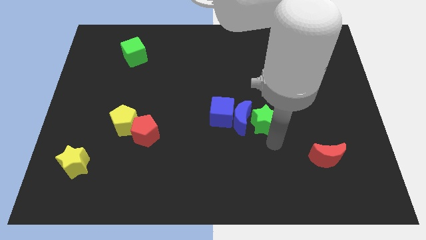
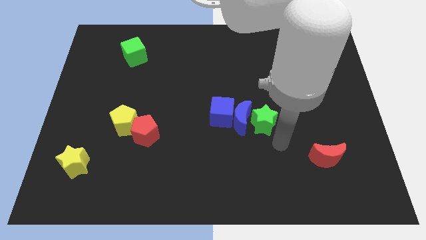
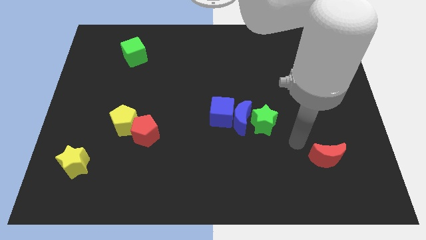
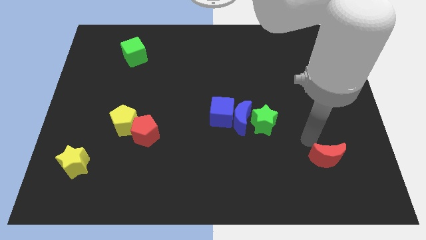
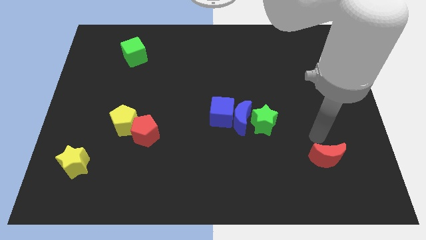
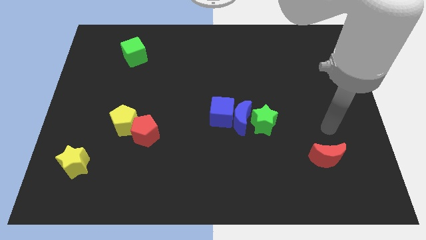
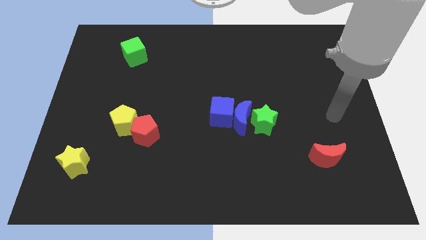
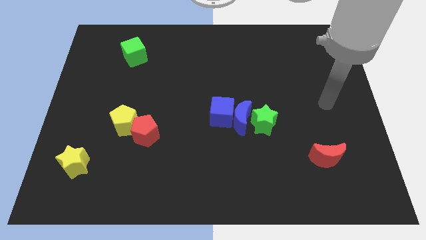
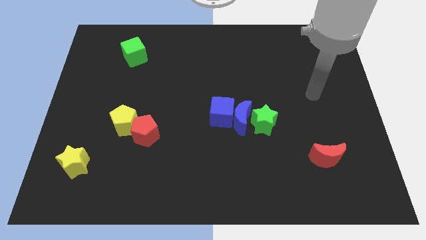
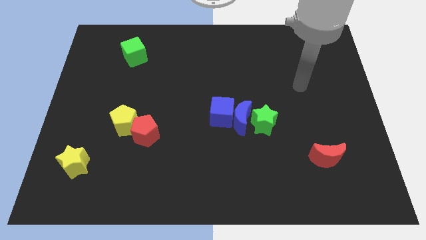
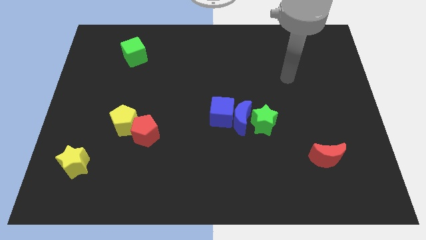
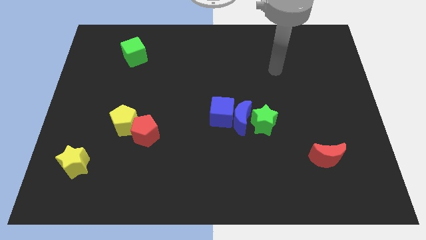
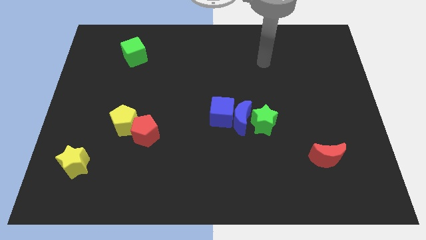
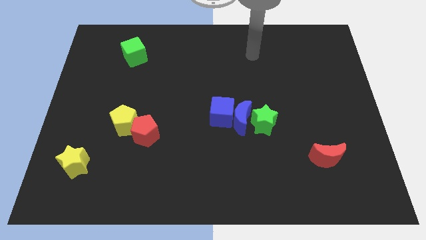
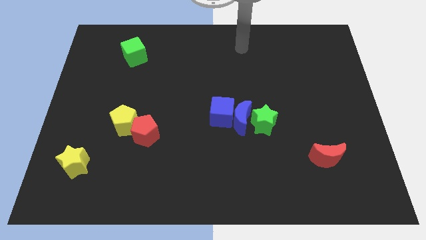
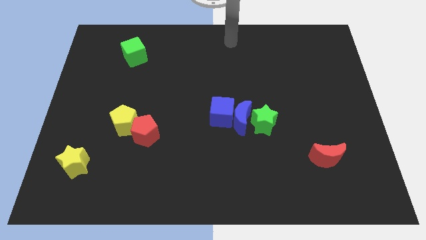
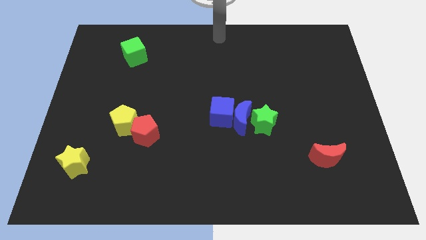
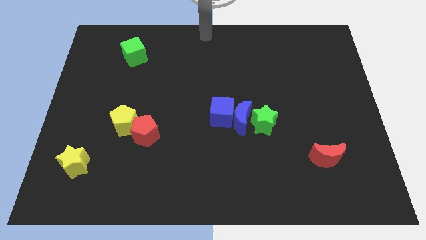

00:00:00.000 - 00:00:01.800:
point your arm at the top center of the board

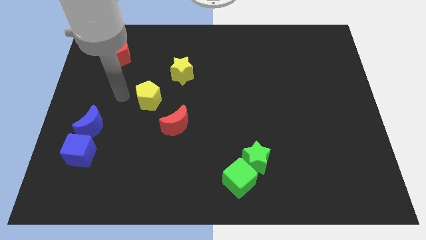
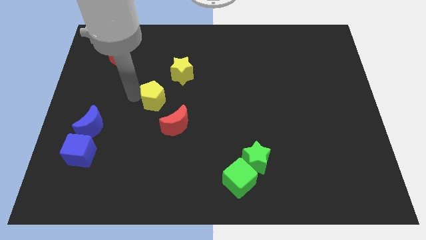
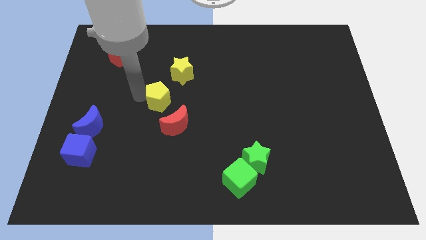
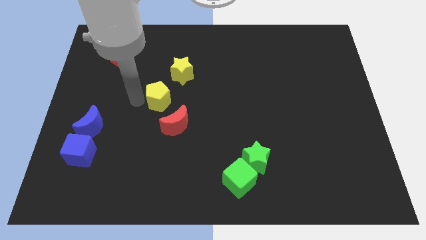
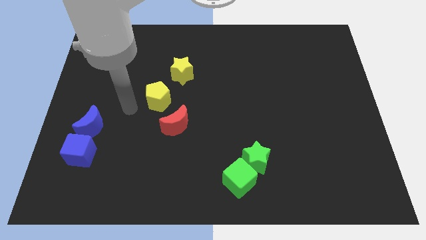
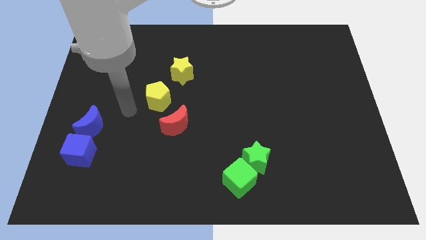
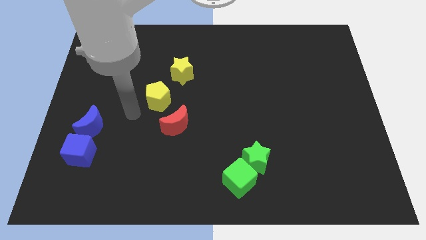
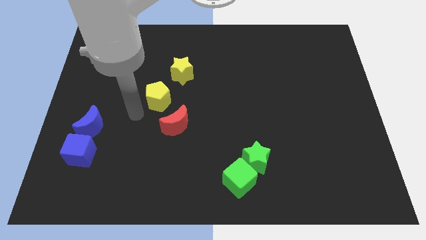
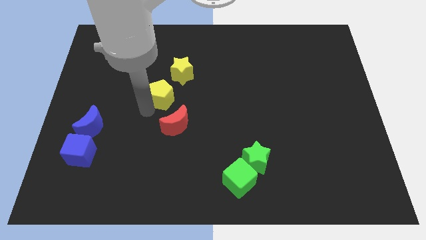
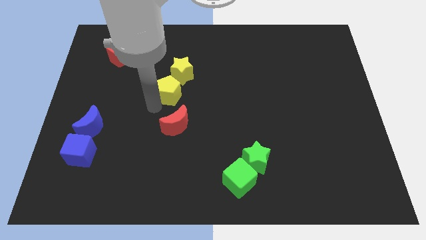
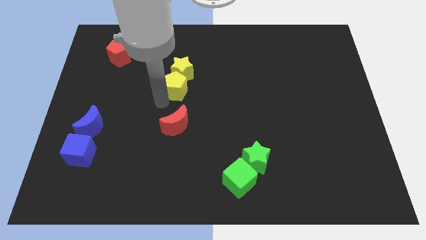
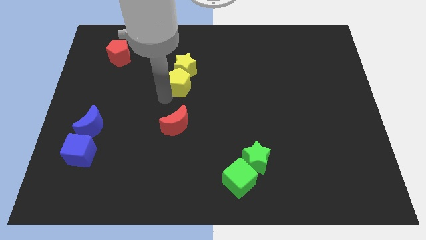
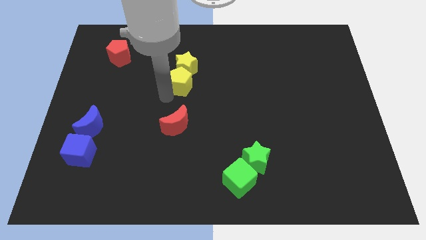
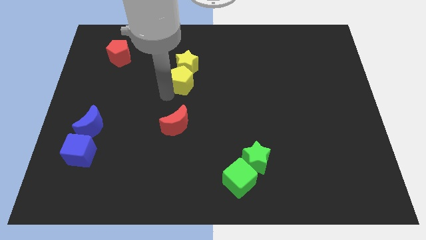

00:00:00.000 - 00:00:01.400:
push yellow pentagon into the yellow star

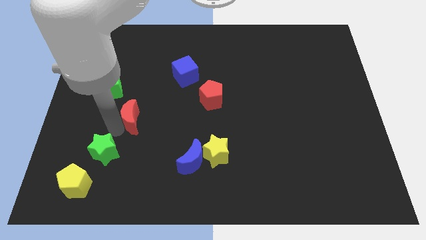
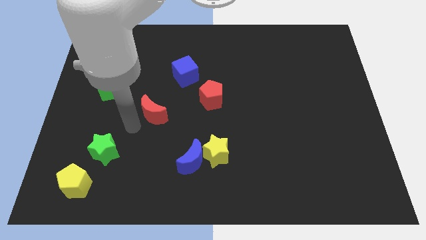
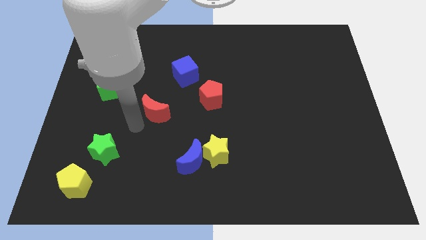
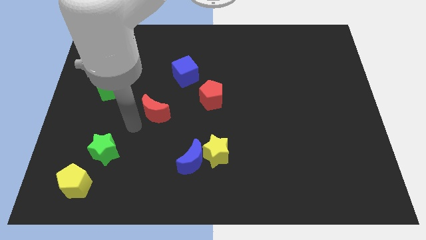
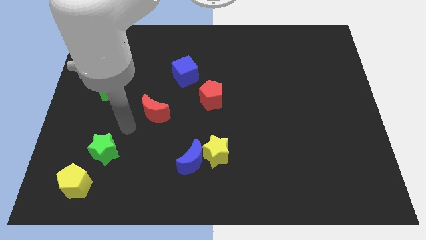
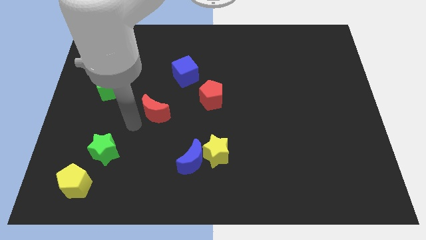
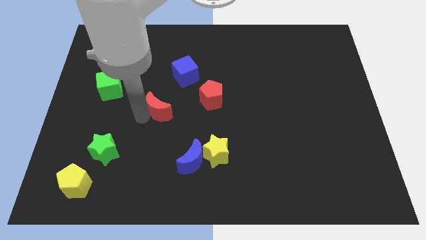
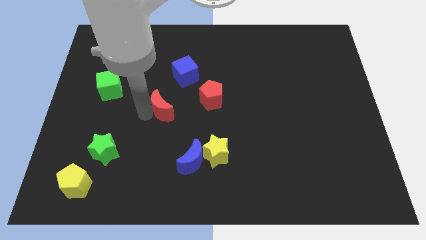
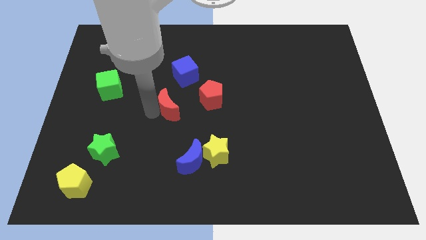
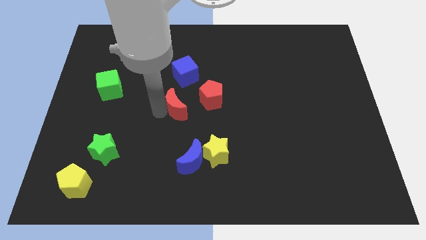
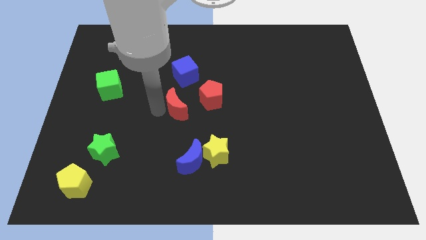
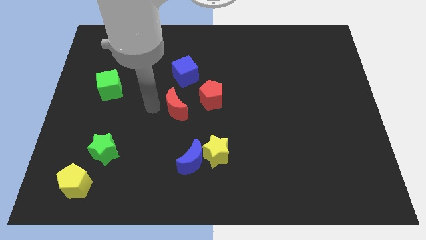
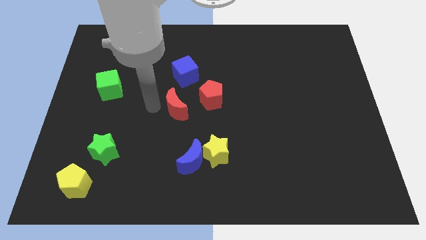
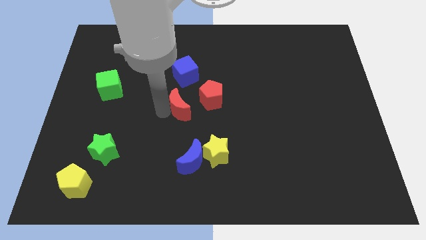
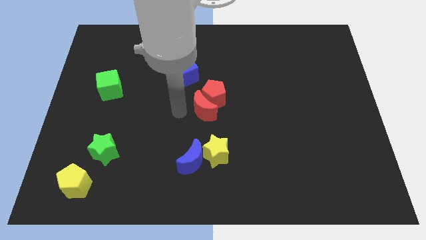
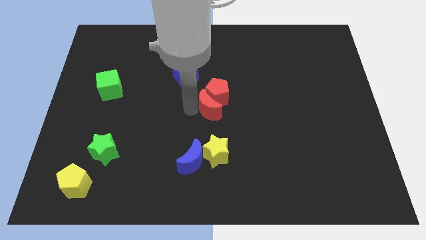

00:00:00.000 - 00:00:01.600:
push the red pentagon with red crescent

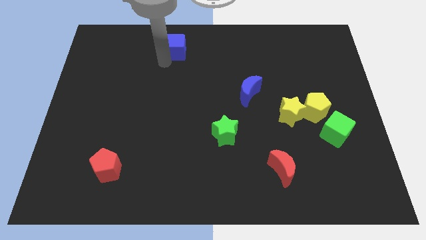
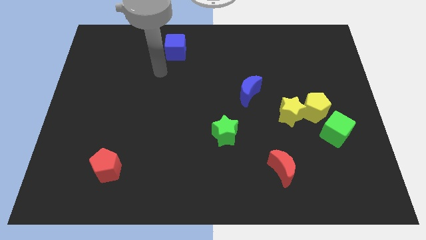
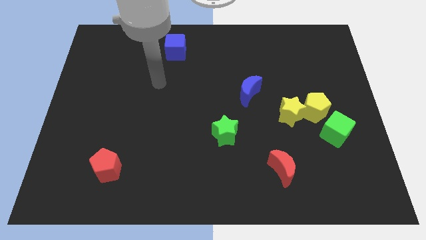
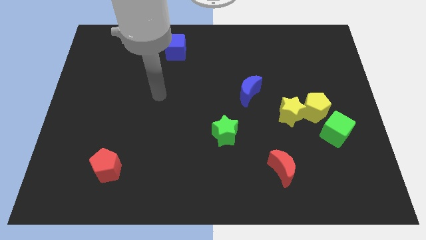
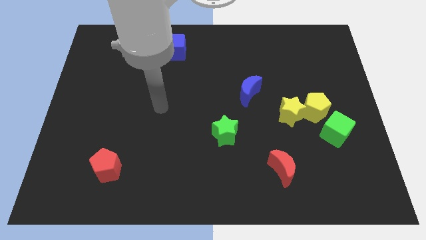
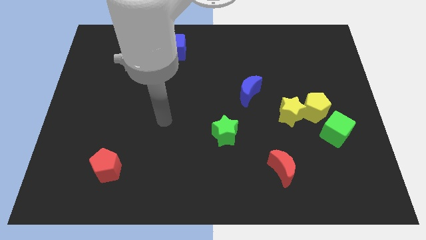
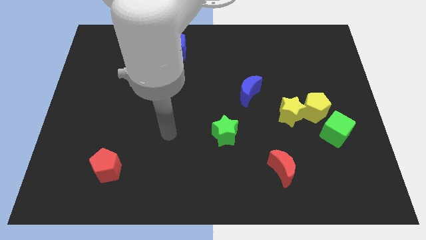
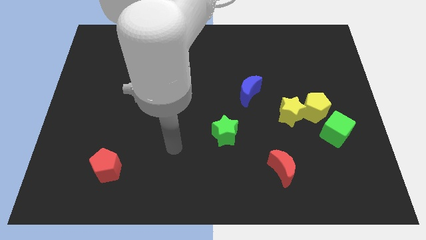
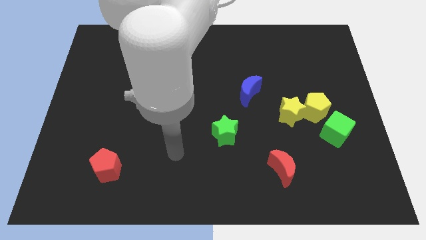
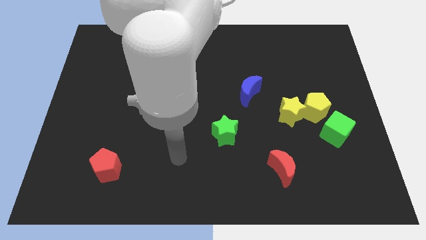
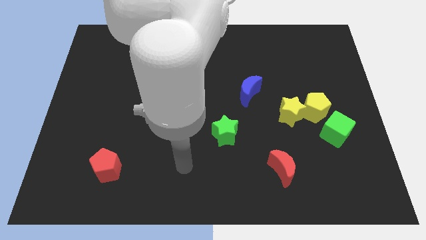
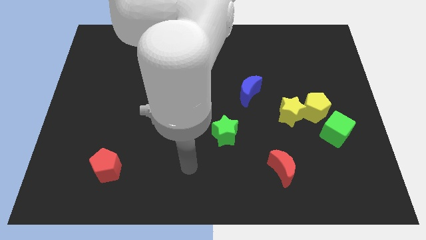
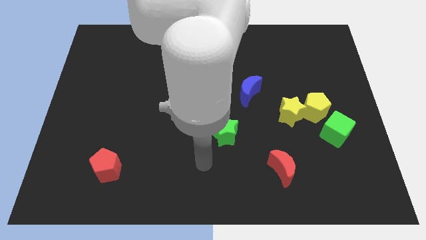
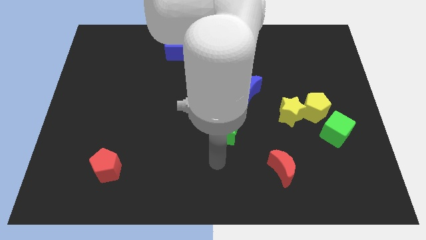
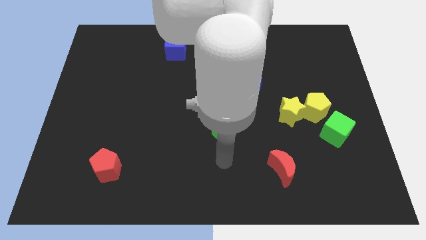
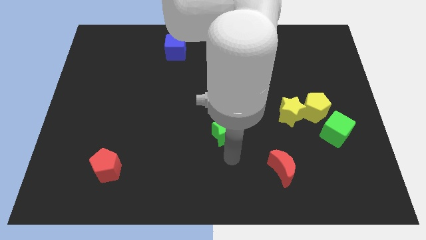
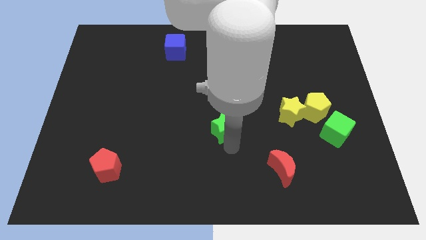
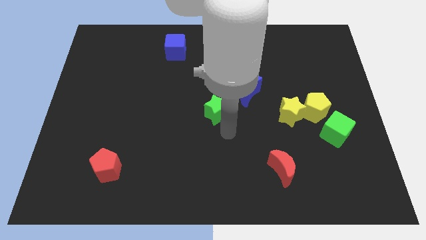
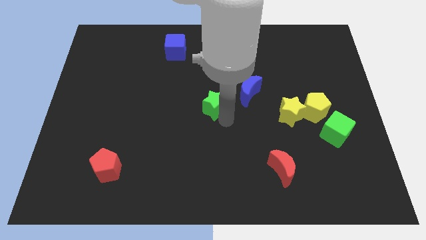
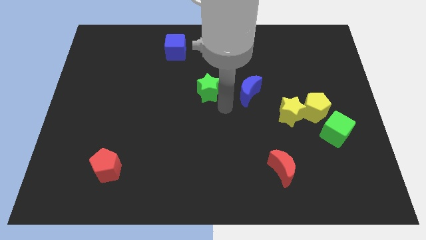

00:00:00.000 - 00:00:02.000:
drag the green star towards top

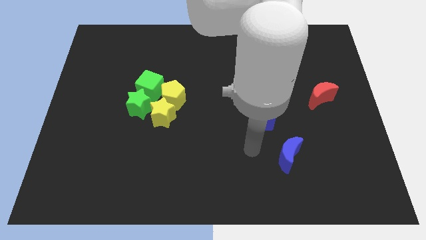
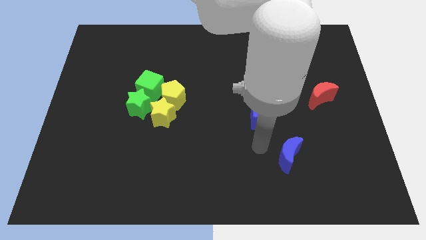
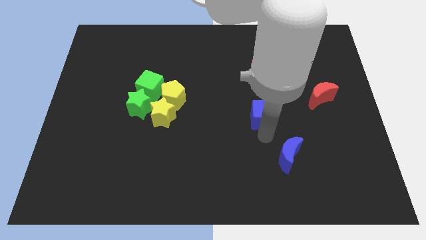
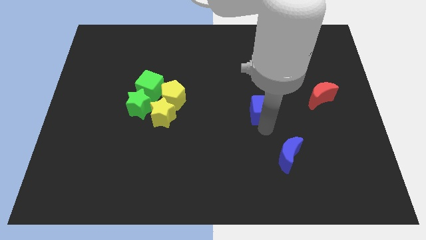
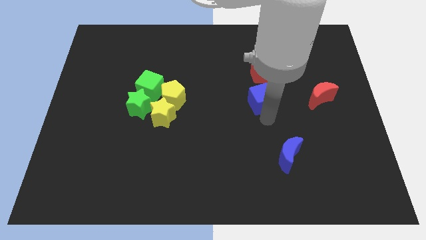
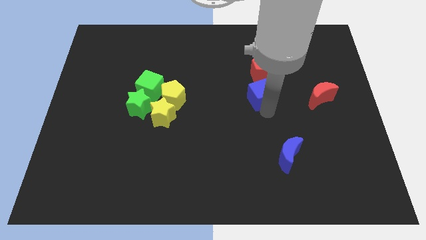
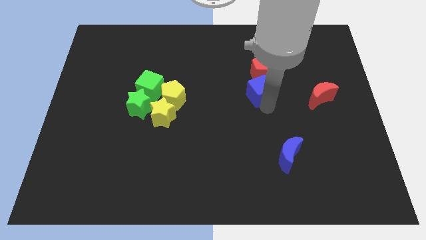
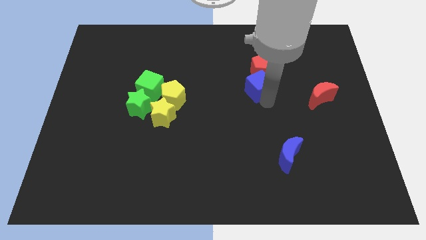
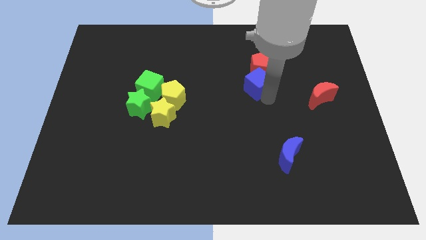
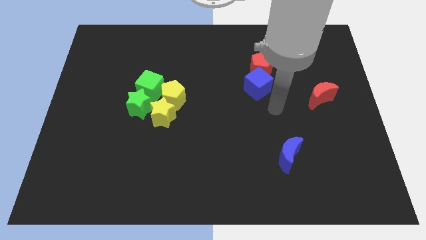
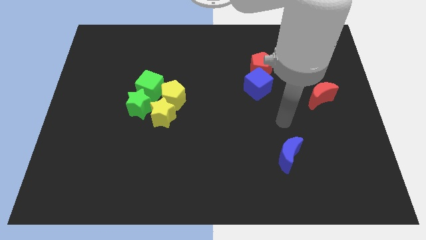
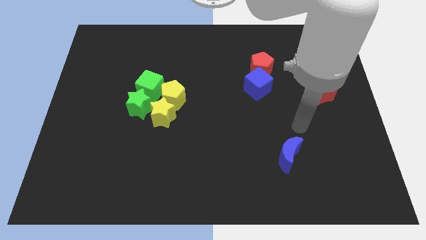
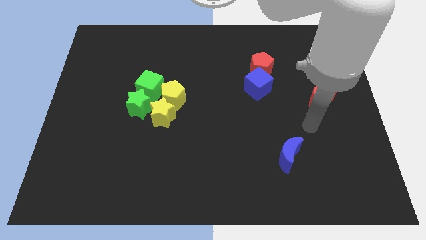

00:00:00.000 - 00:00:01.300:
push blue cube into the red pentagon

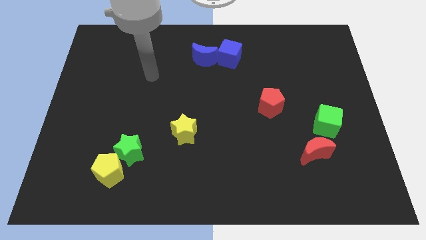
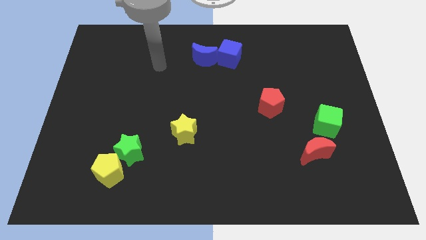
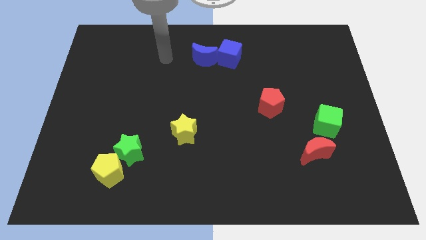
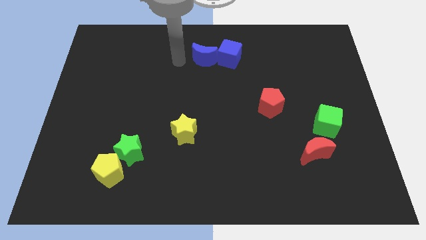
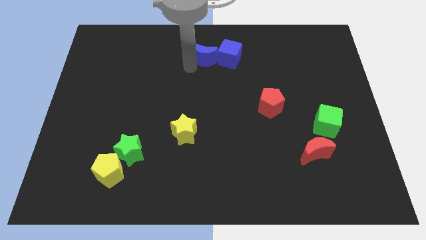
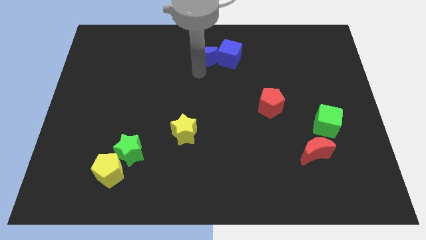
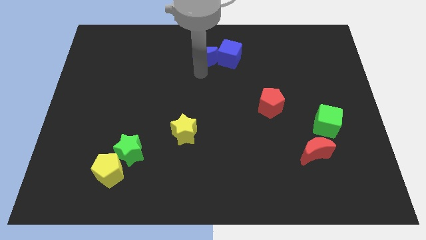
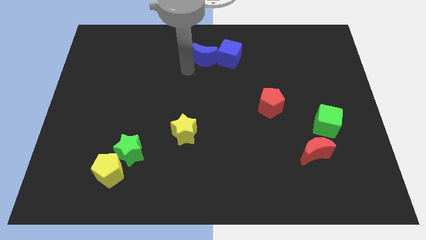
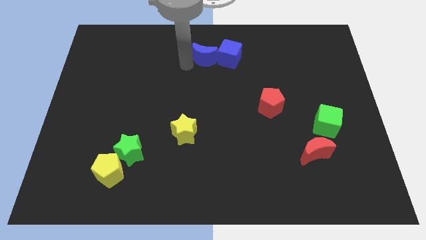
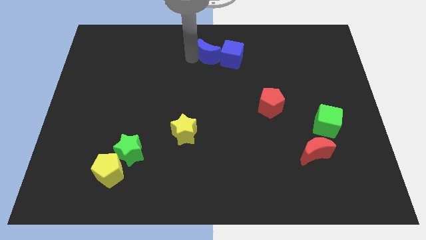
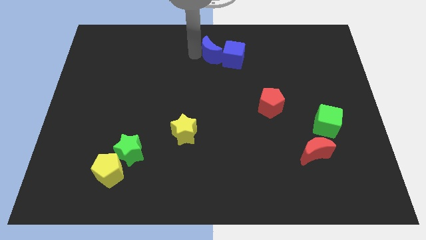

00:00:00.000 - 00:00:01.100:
move the blue crescent into the blue cube
